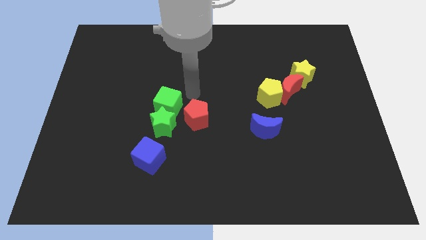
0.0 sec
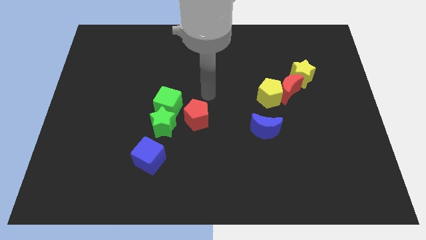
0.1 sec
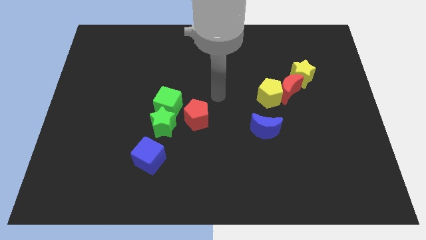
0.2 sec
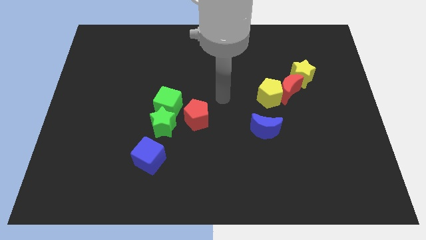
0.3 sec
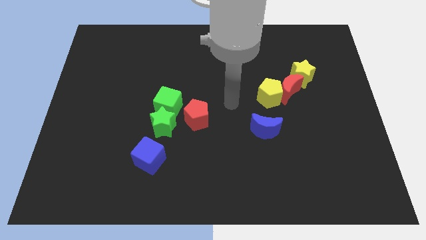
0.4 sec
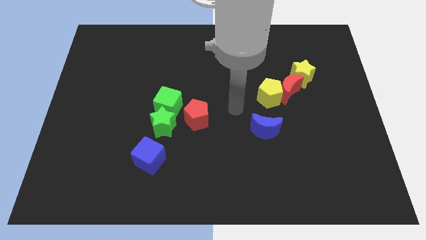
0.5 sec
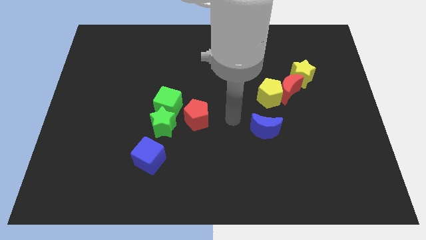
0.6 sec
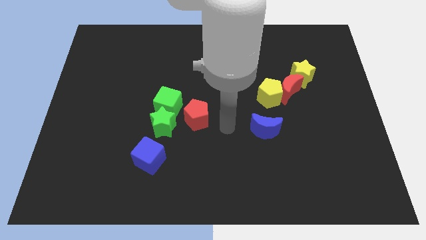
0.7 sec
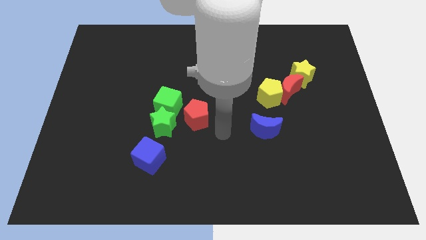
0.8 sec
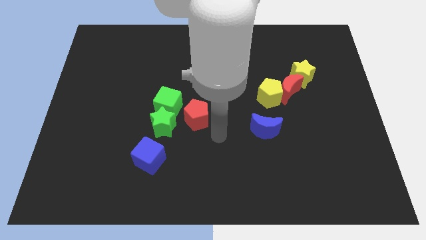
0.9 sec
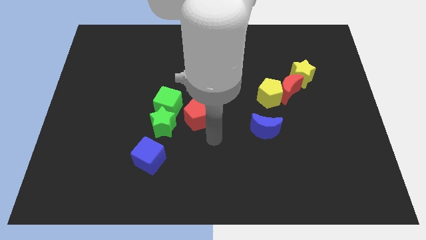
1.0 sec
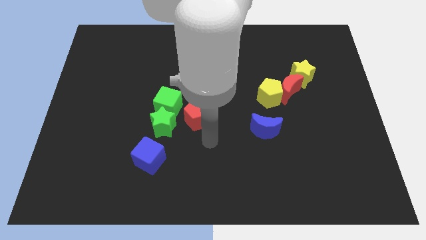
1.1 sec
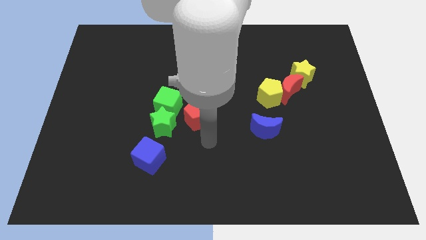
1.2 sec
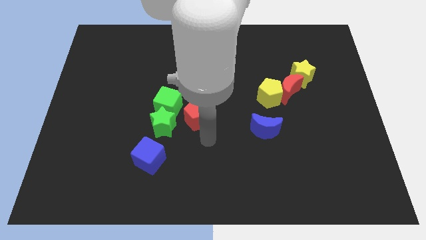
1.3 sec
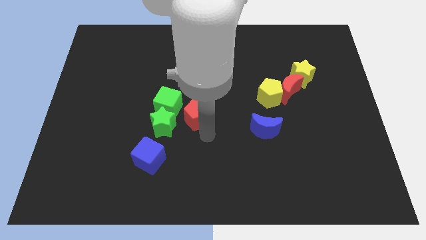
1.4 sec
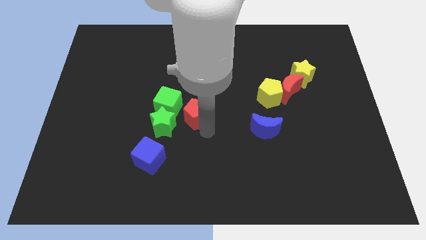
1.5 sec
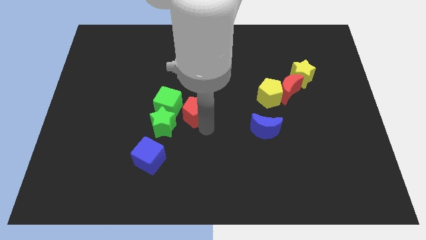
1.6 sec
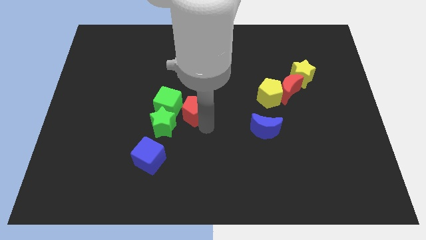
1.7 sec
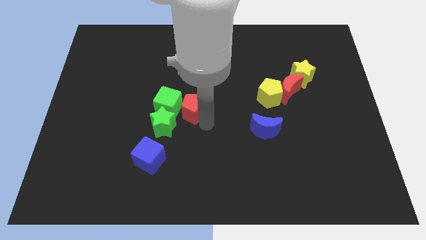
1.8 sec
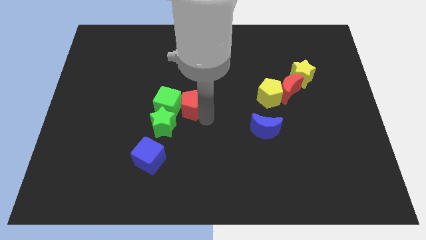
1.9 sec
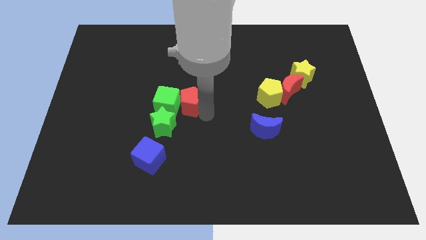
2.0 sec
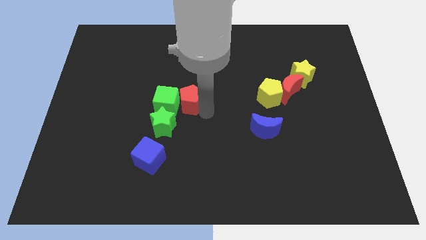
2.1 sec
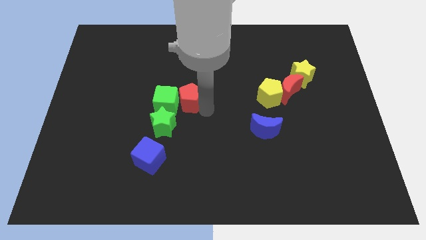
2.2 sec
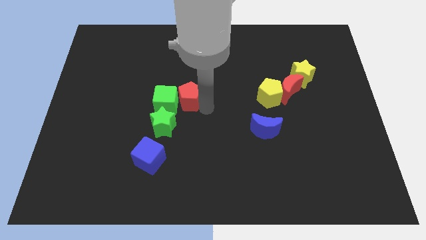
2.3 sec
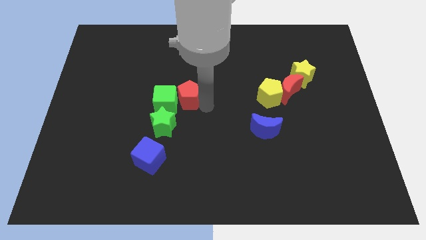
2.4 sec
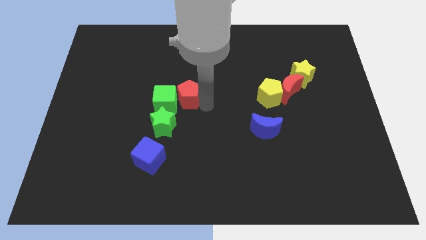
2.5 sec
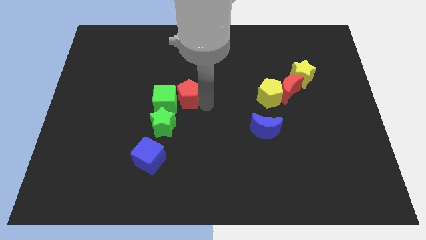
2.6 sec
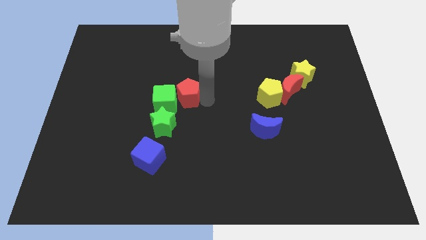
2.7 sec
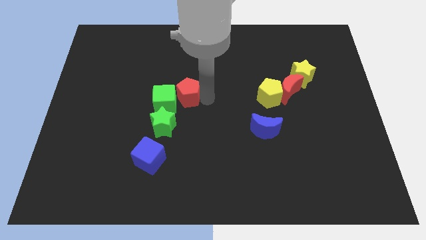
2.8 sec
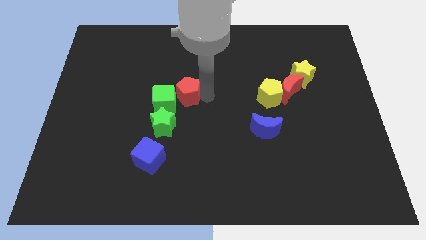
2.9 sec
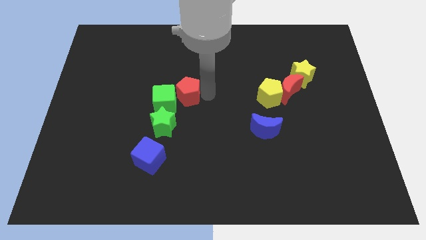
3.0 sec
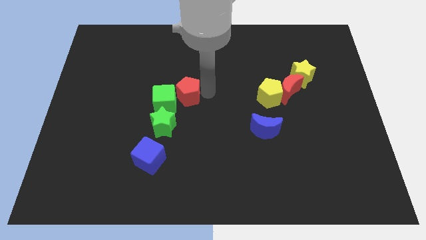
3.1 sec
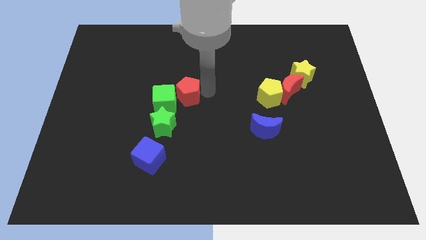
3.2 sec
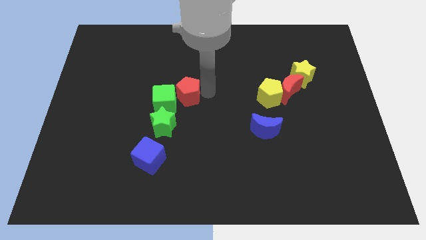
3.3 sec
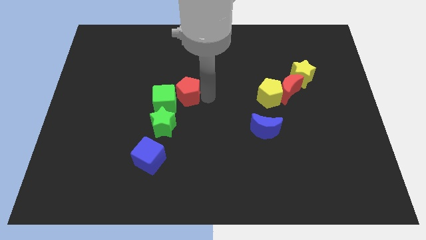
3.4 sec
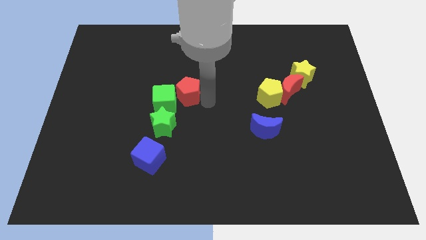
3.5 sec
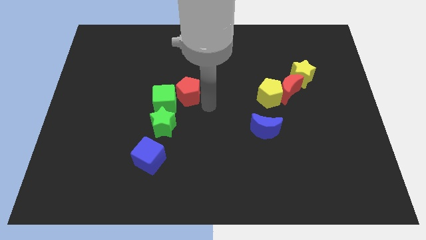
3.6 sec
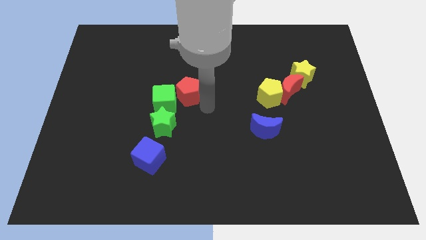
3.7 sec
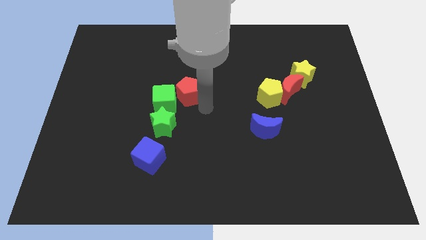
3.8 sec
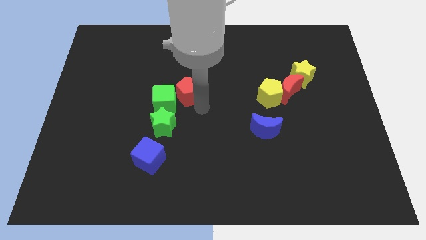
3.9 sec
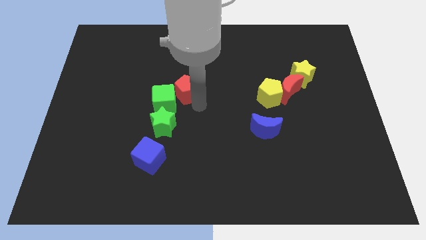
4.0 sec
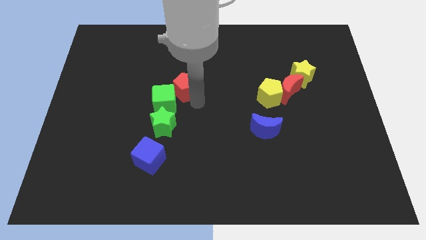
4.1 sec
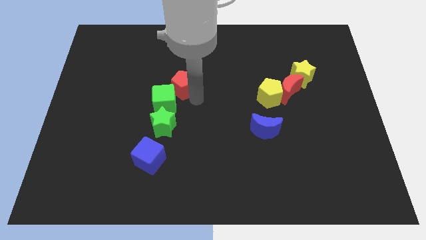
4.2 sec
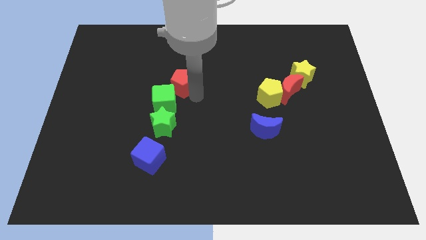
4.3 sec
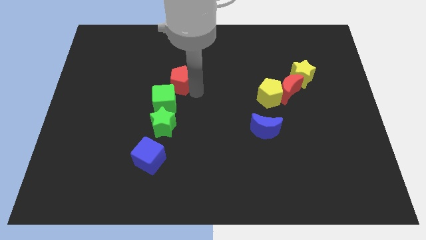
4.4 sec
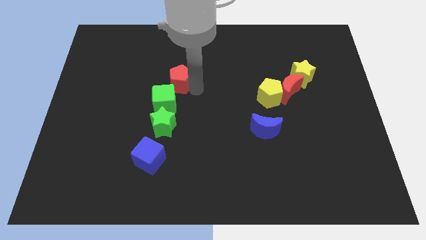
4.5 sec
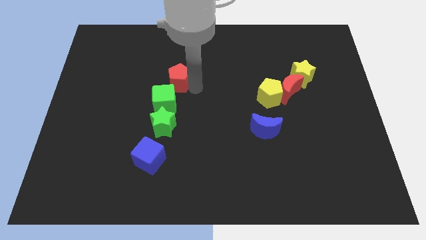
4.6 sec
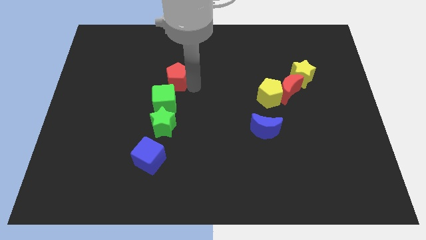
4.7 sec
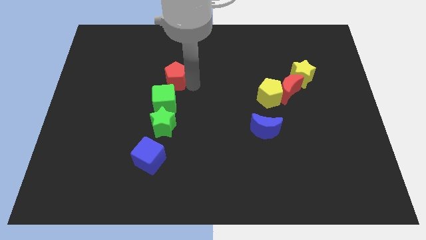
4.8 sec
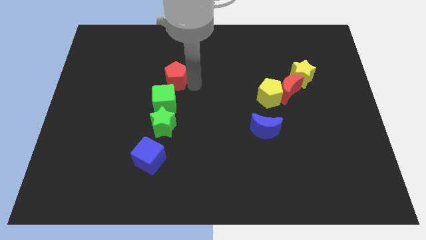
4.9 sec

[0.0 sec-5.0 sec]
place the red pentagon above the green cube

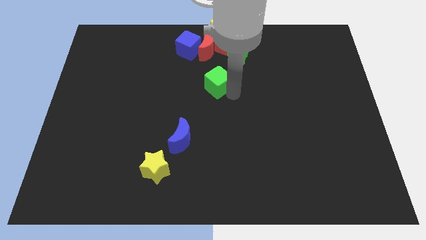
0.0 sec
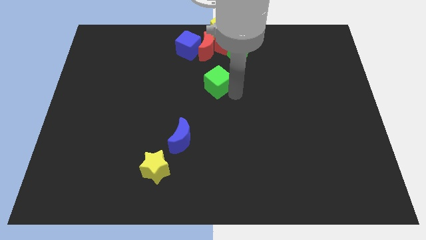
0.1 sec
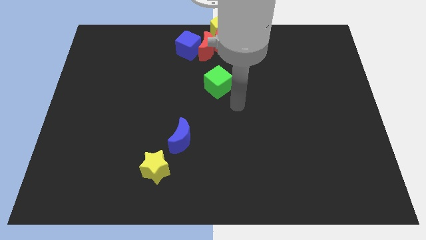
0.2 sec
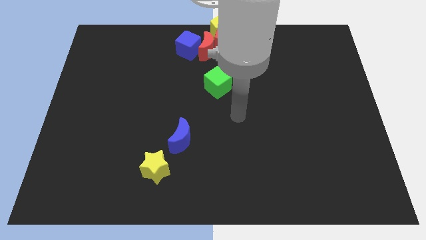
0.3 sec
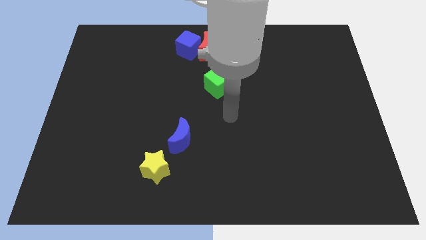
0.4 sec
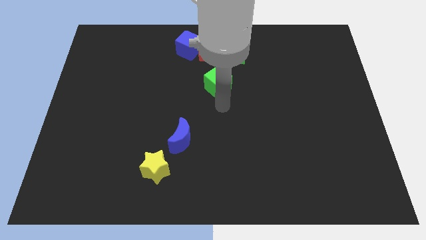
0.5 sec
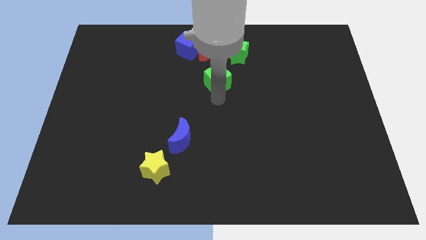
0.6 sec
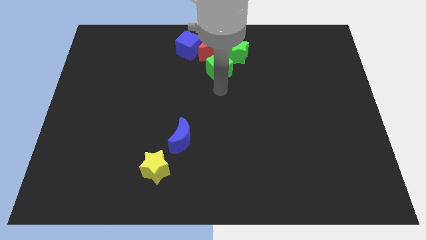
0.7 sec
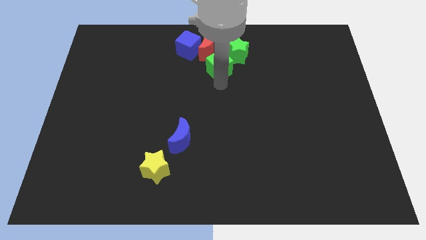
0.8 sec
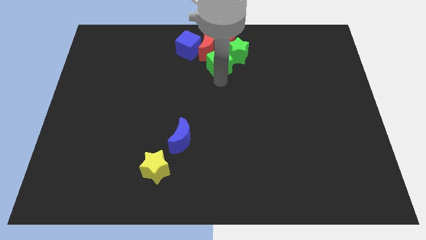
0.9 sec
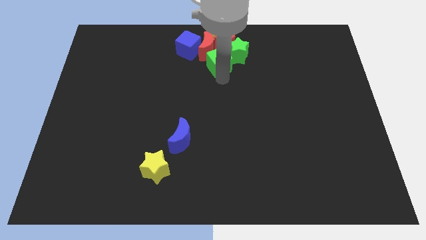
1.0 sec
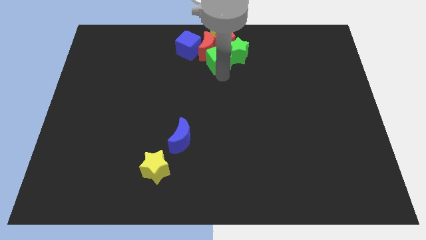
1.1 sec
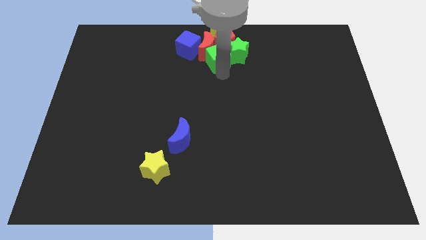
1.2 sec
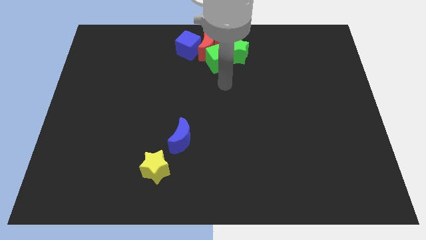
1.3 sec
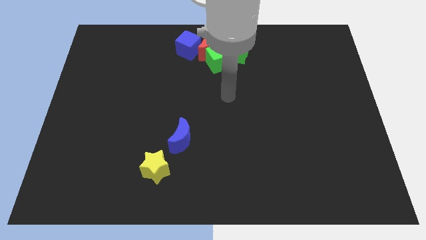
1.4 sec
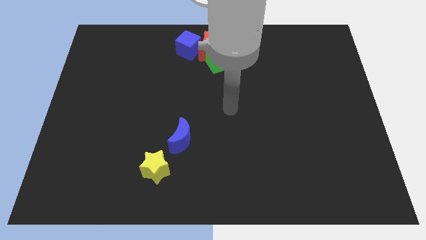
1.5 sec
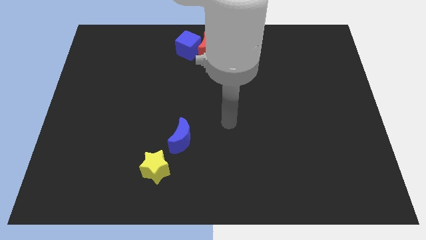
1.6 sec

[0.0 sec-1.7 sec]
slide the green cube into the red crescent

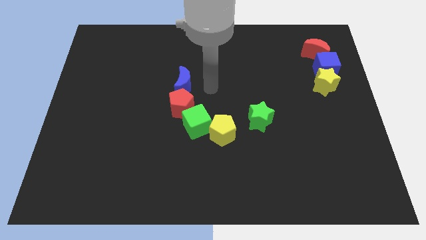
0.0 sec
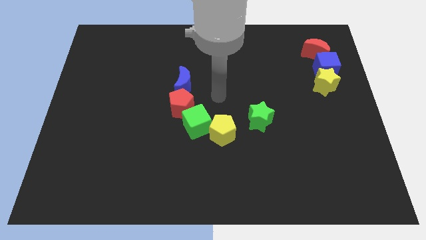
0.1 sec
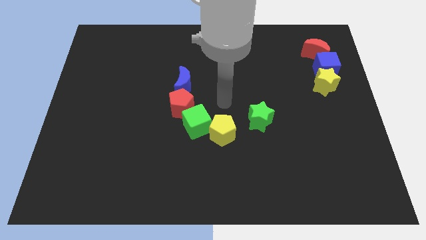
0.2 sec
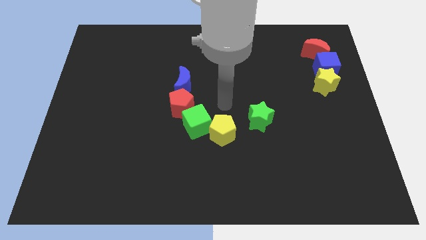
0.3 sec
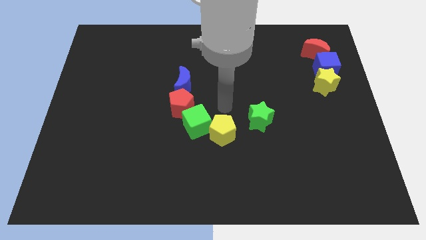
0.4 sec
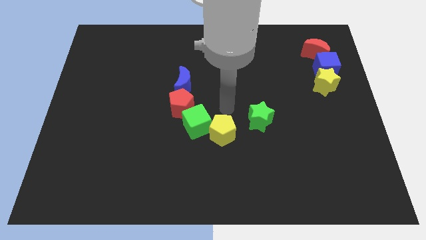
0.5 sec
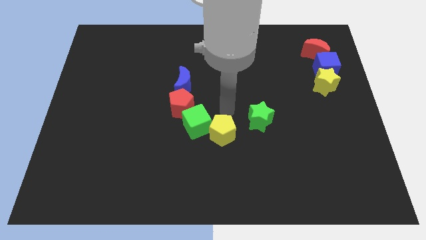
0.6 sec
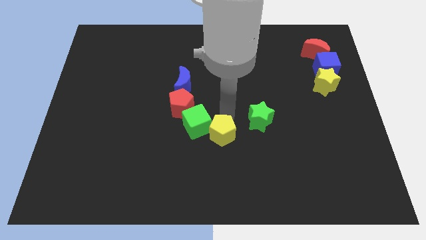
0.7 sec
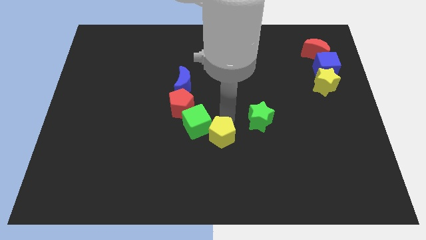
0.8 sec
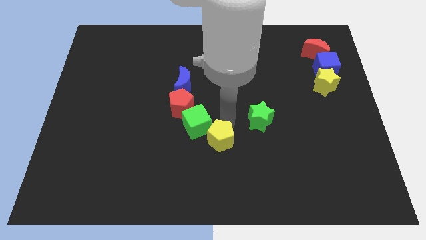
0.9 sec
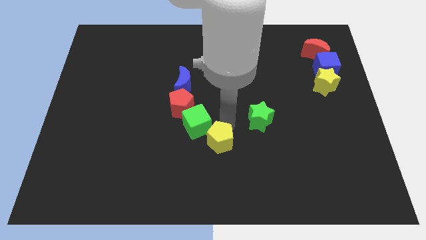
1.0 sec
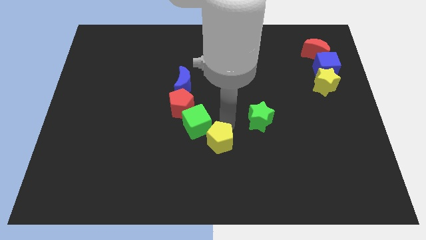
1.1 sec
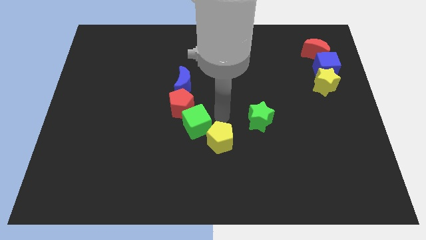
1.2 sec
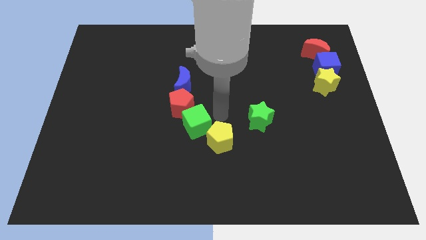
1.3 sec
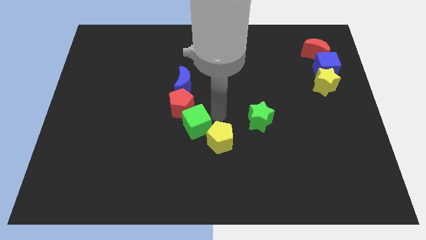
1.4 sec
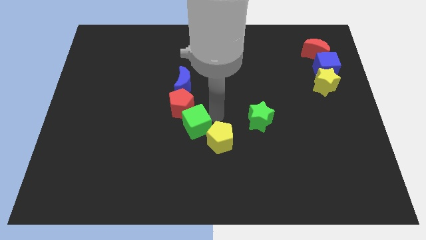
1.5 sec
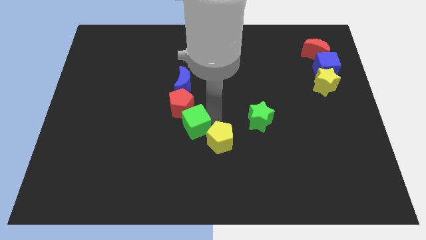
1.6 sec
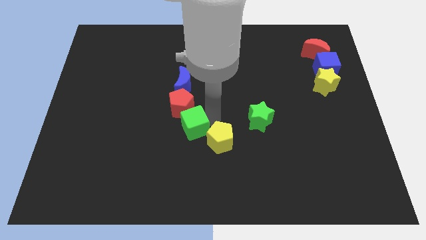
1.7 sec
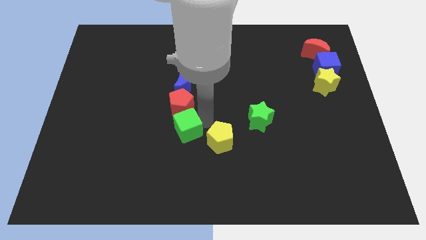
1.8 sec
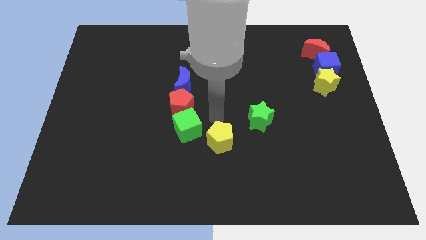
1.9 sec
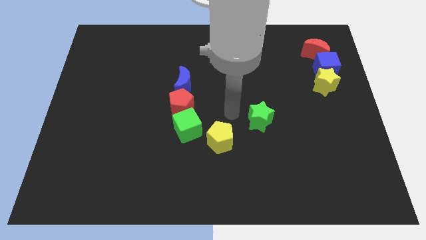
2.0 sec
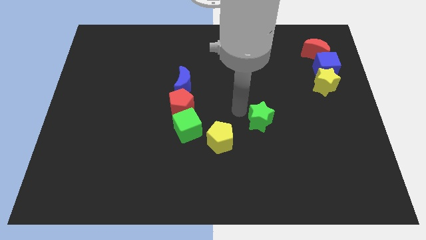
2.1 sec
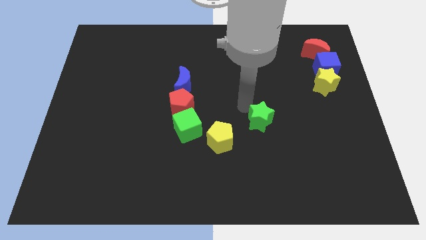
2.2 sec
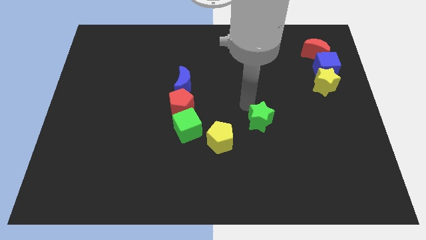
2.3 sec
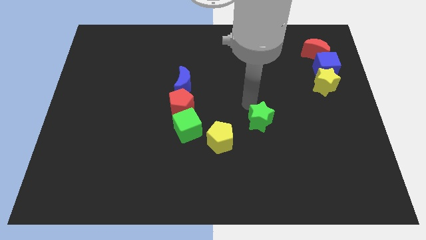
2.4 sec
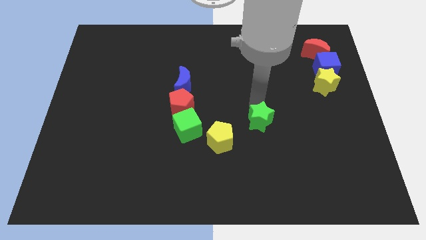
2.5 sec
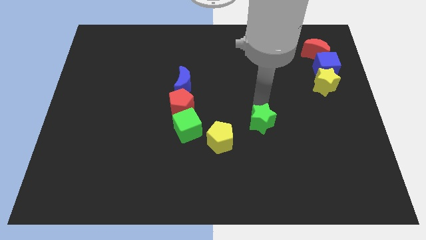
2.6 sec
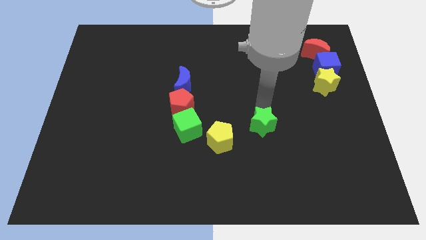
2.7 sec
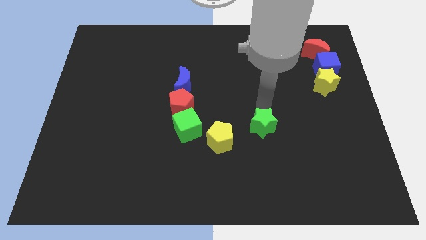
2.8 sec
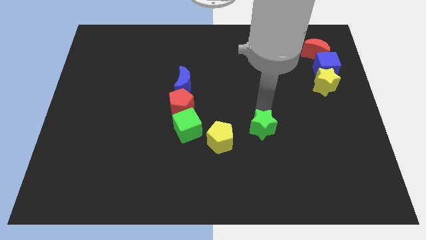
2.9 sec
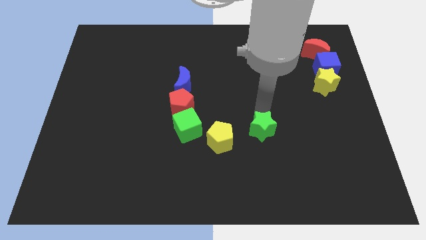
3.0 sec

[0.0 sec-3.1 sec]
push yellow pentagon downwards a bit
